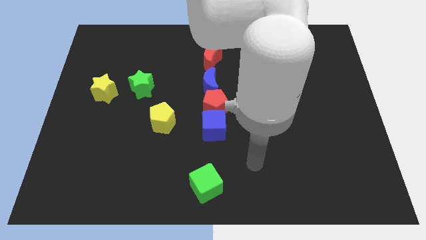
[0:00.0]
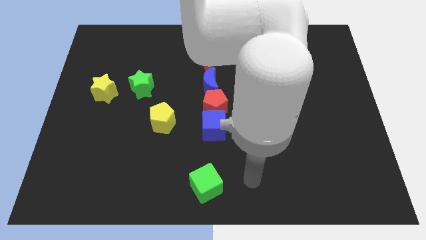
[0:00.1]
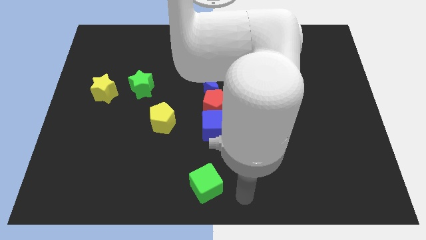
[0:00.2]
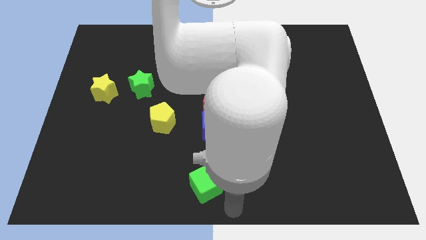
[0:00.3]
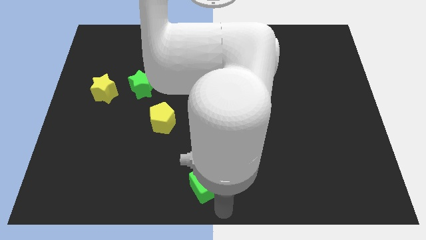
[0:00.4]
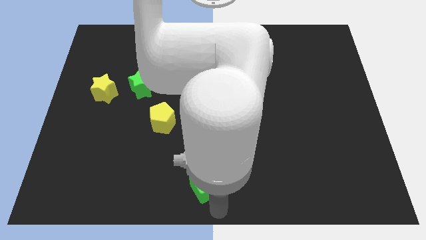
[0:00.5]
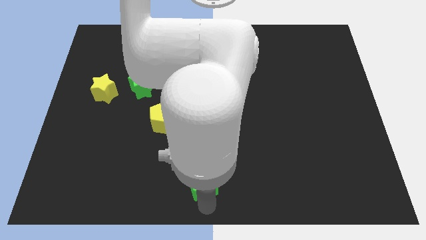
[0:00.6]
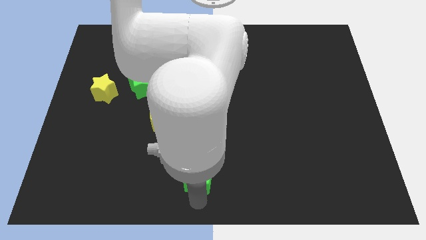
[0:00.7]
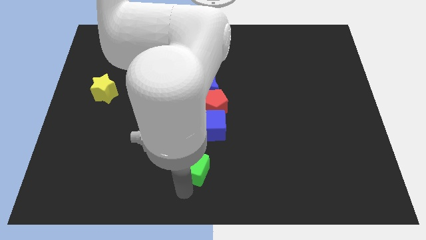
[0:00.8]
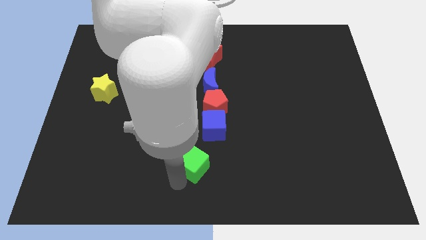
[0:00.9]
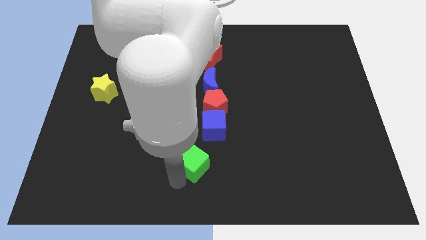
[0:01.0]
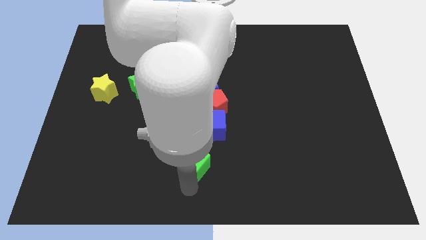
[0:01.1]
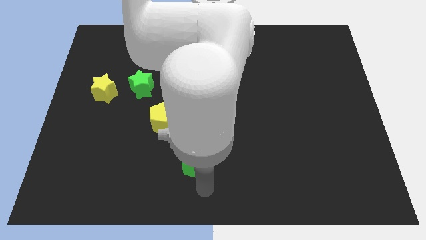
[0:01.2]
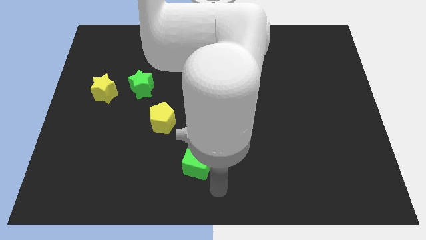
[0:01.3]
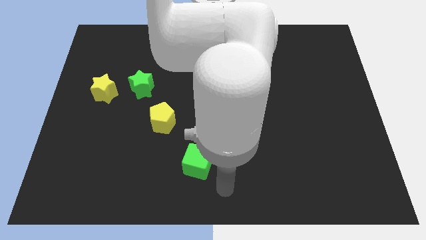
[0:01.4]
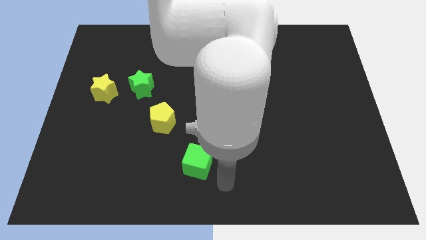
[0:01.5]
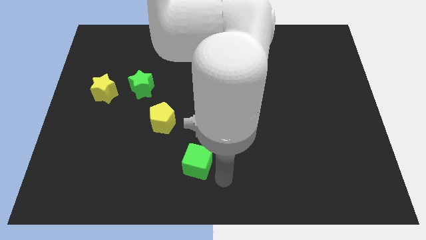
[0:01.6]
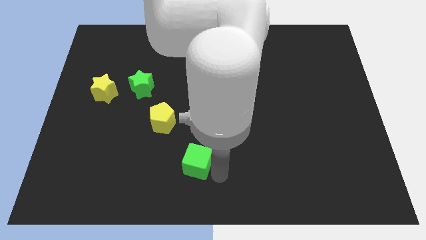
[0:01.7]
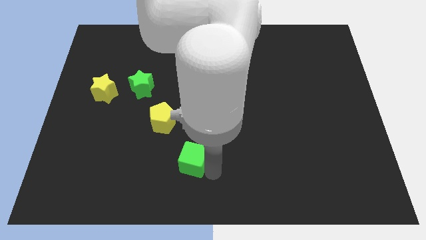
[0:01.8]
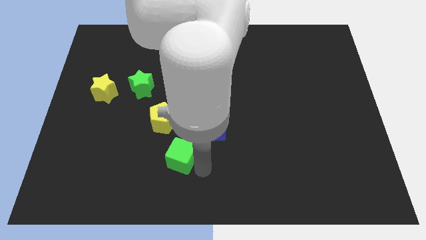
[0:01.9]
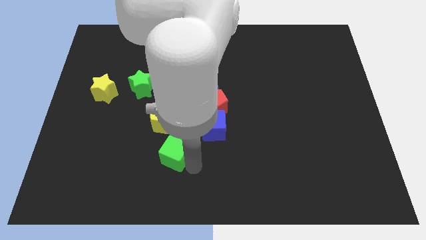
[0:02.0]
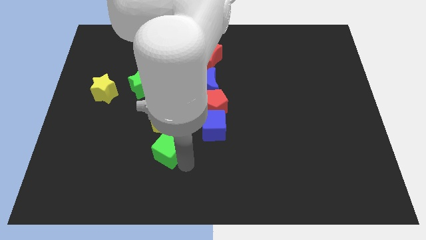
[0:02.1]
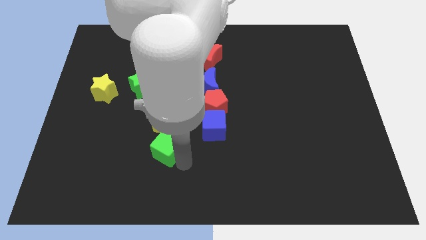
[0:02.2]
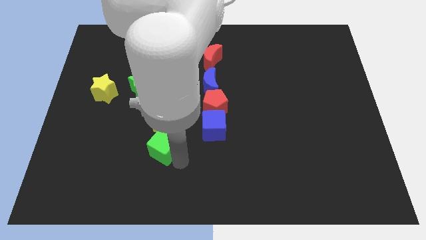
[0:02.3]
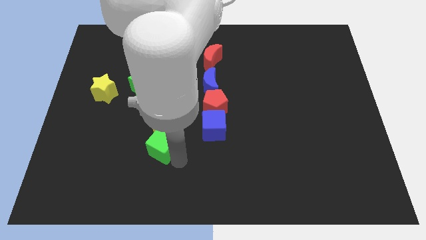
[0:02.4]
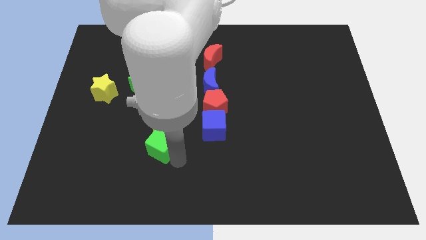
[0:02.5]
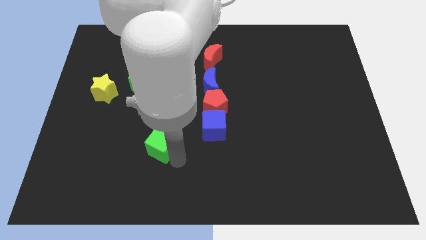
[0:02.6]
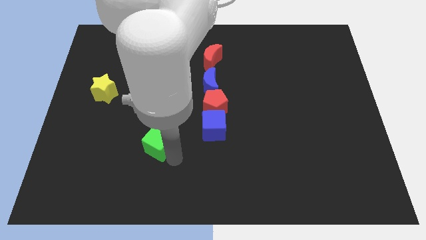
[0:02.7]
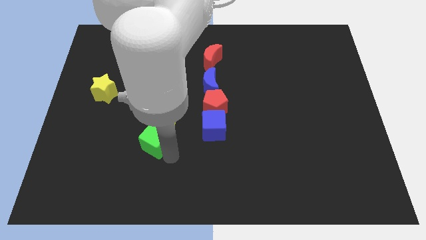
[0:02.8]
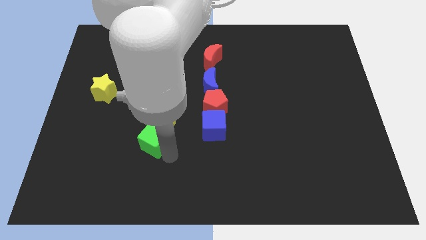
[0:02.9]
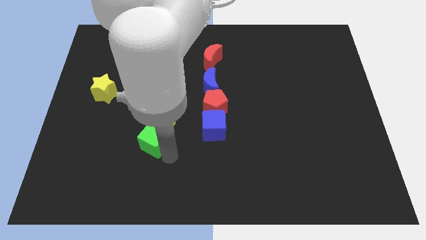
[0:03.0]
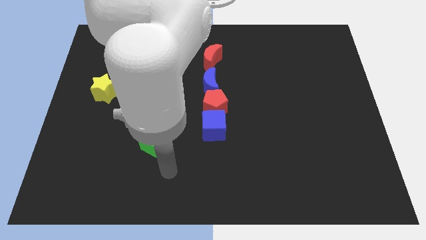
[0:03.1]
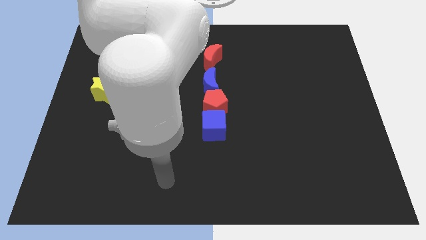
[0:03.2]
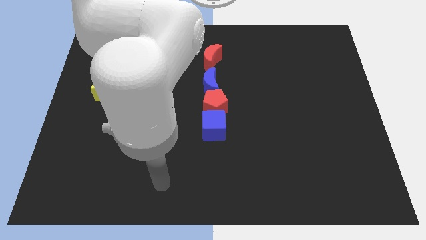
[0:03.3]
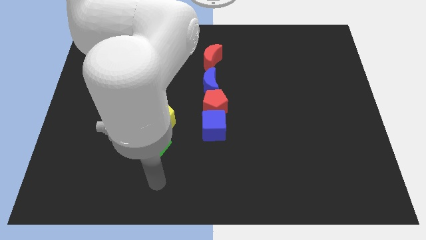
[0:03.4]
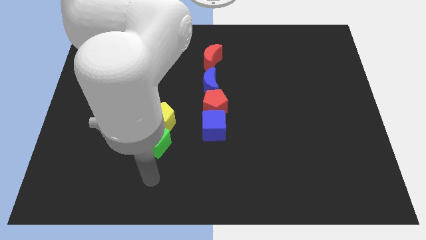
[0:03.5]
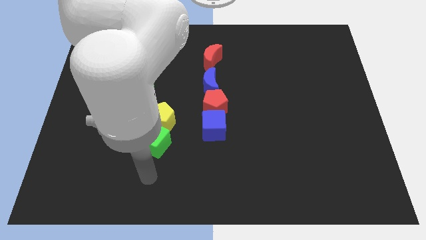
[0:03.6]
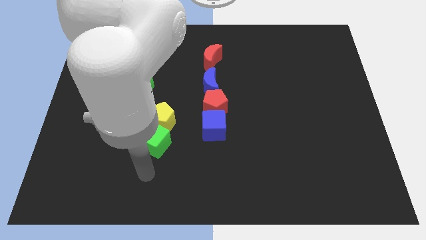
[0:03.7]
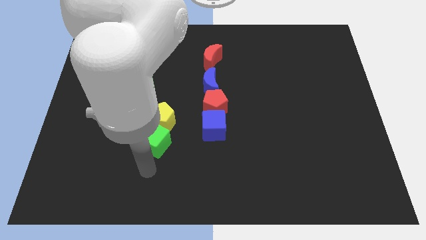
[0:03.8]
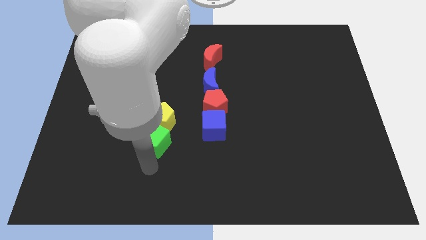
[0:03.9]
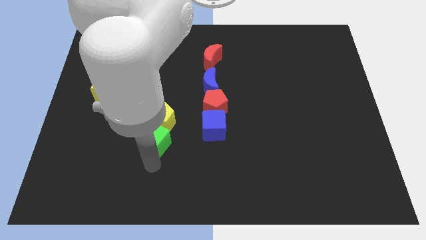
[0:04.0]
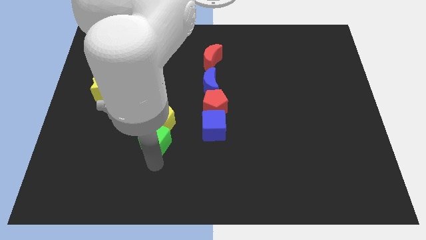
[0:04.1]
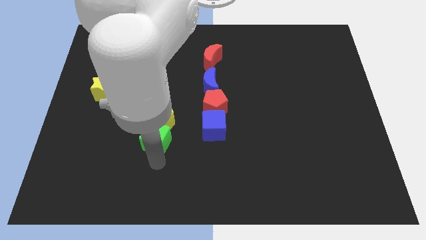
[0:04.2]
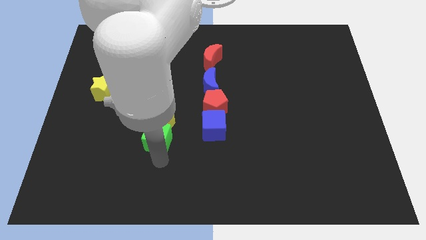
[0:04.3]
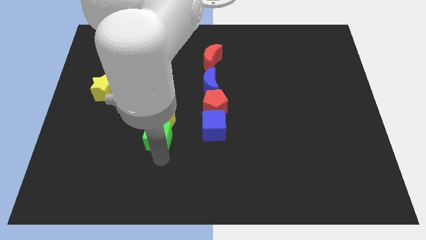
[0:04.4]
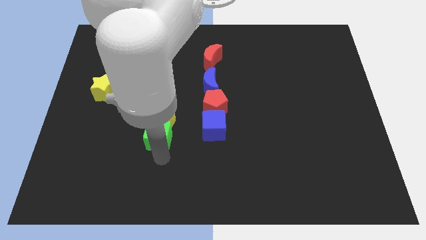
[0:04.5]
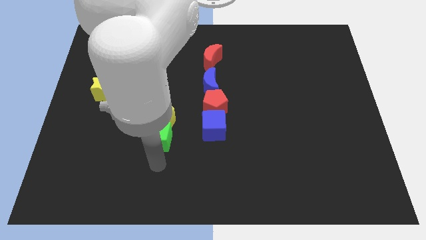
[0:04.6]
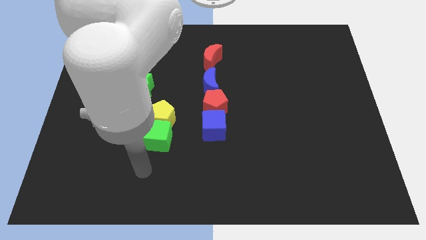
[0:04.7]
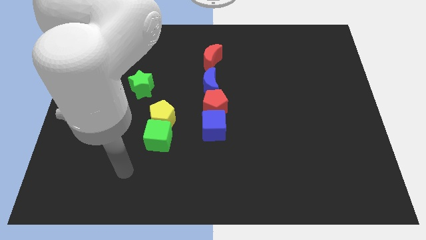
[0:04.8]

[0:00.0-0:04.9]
move the green cube below the yellow pentagon

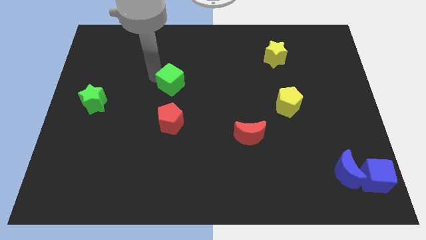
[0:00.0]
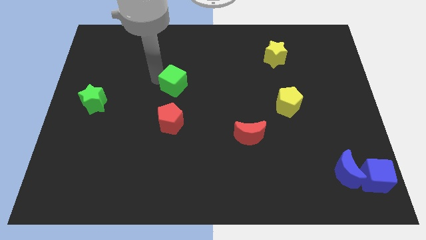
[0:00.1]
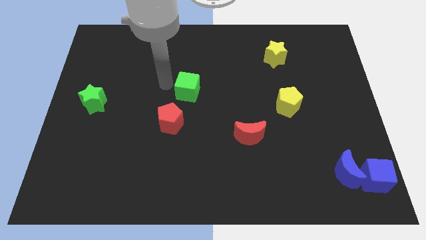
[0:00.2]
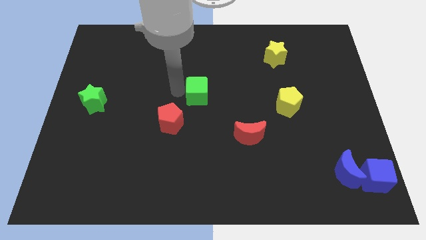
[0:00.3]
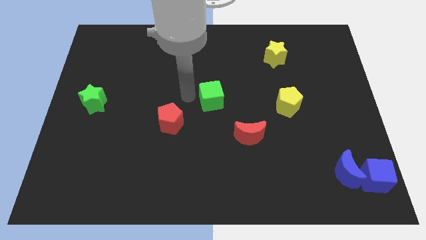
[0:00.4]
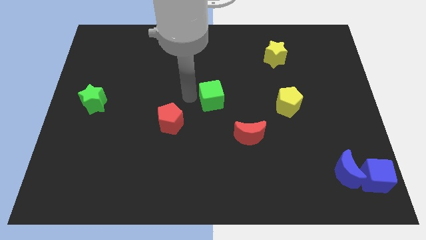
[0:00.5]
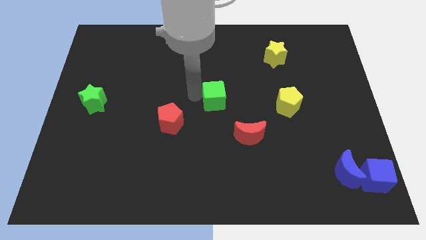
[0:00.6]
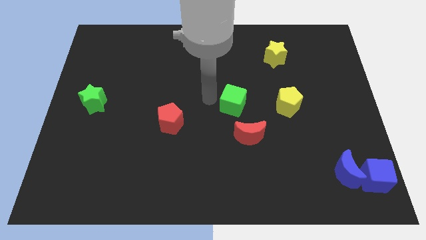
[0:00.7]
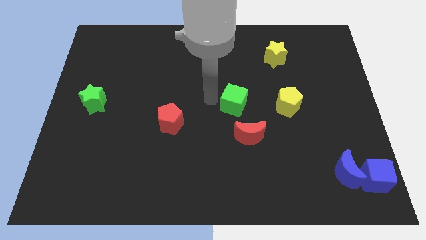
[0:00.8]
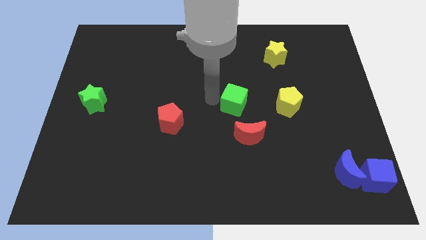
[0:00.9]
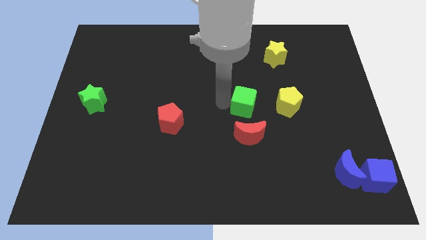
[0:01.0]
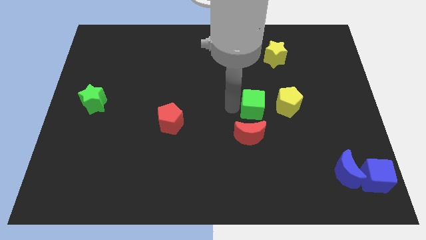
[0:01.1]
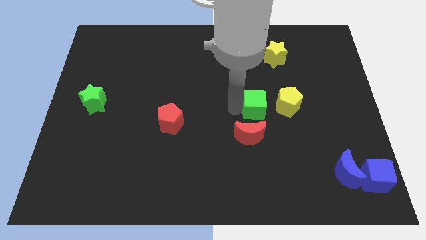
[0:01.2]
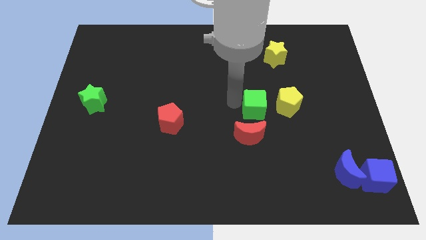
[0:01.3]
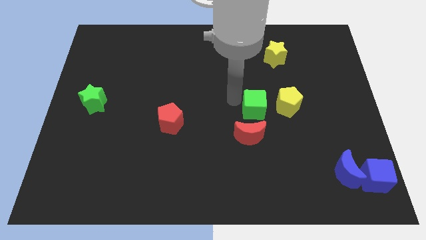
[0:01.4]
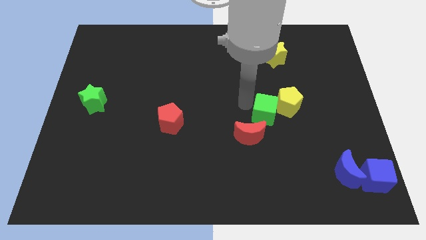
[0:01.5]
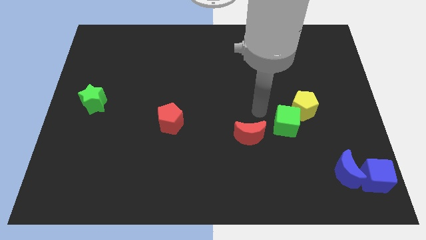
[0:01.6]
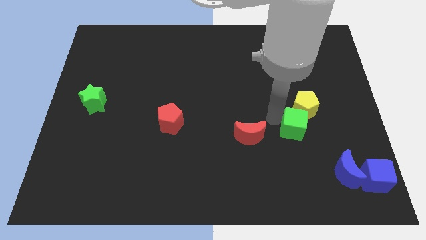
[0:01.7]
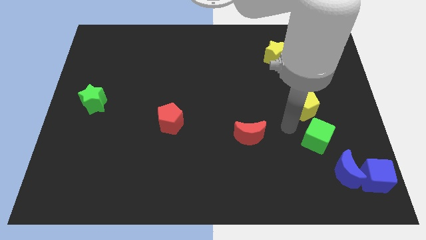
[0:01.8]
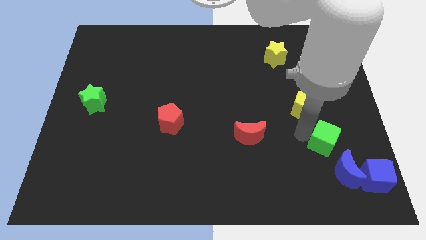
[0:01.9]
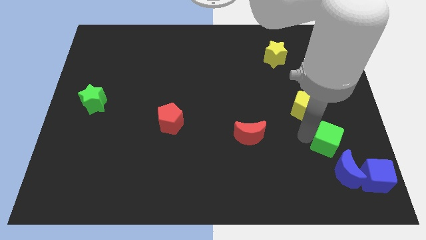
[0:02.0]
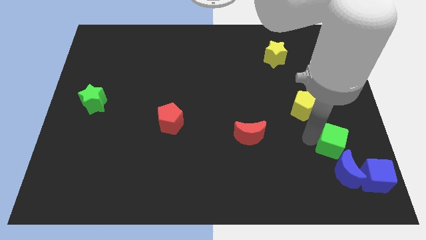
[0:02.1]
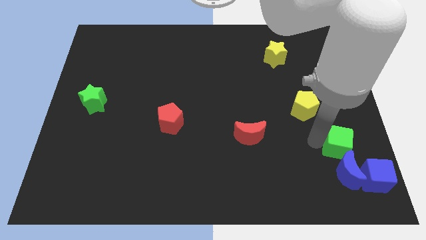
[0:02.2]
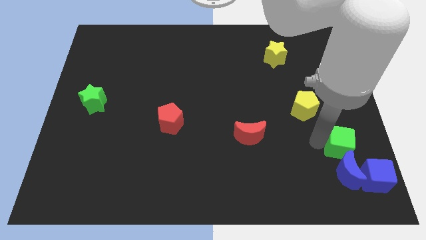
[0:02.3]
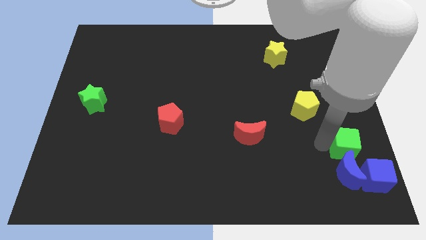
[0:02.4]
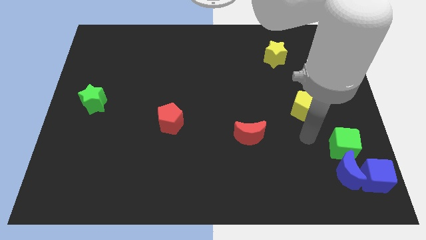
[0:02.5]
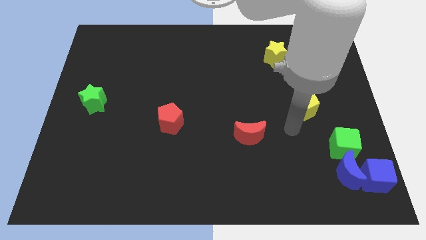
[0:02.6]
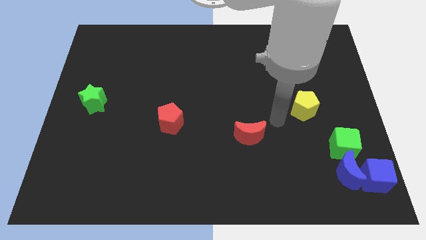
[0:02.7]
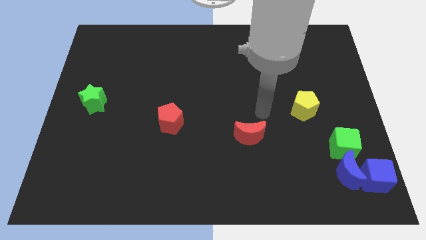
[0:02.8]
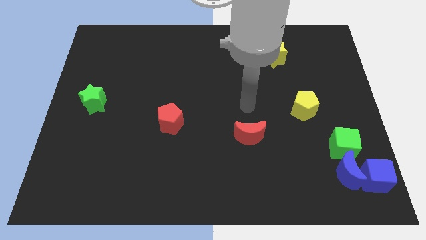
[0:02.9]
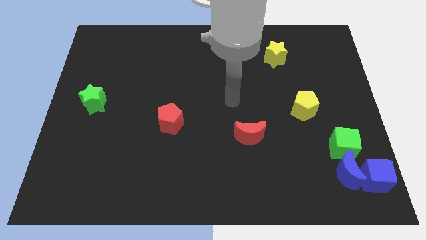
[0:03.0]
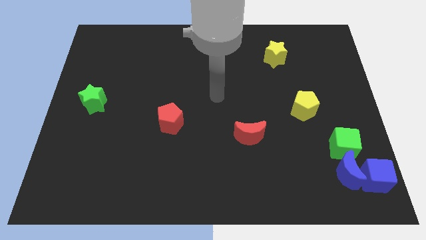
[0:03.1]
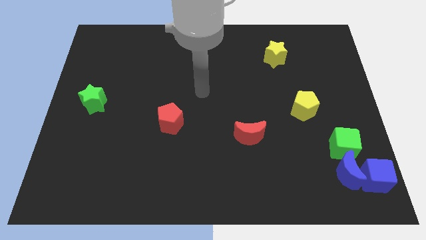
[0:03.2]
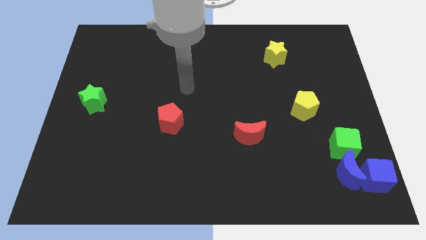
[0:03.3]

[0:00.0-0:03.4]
push the green cube into the blue crescent

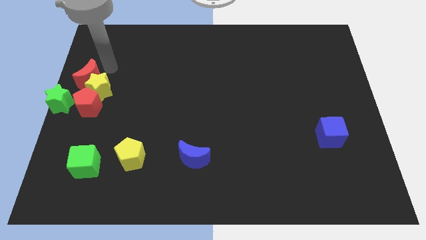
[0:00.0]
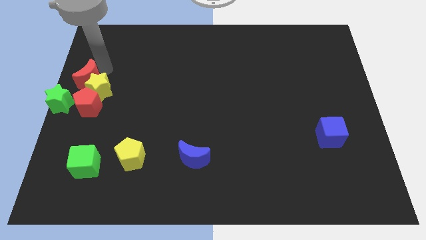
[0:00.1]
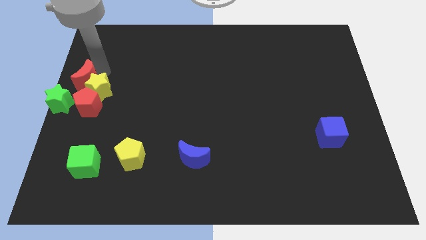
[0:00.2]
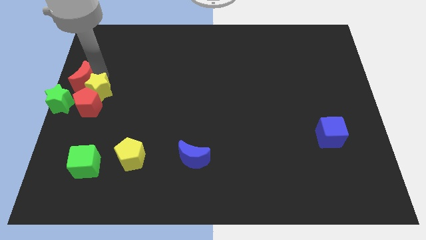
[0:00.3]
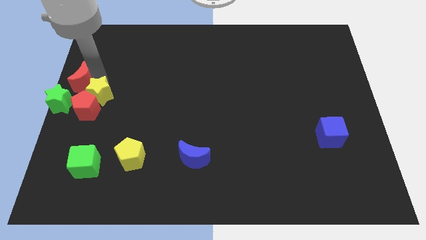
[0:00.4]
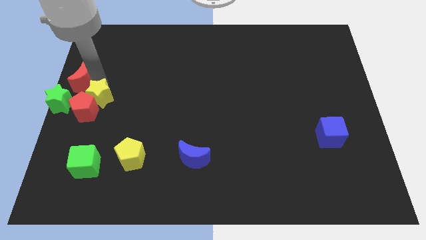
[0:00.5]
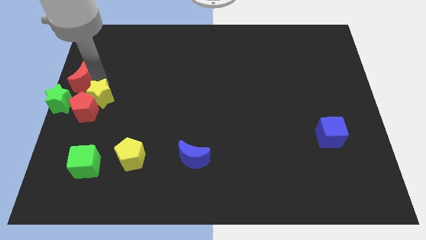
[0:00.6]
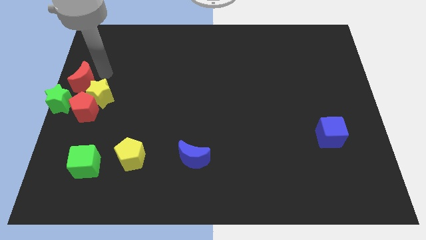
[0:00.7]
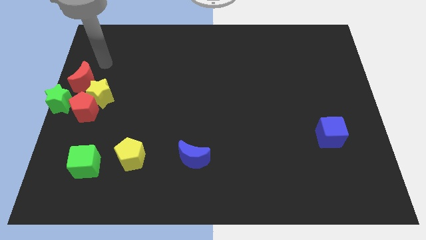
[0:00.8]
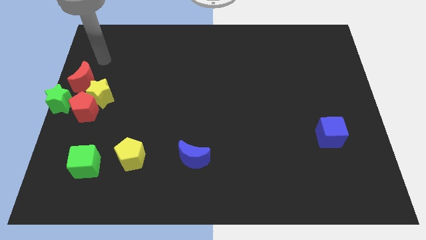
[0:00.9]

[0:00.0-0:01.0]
push the red pentagon with the help of the yellow star
